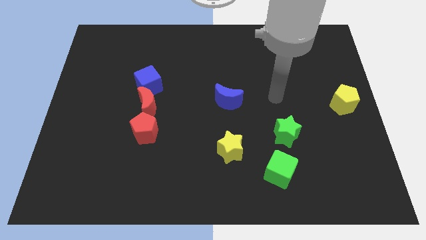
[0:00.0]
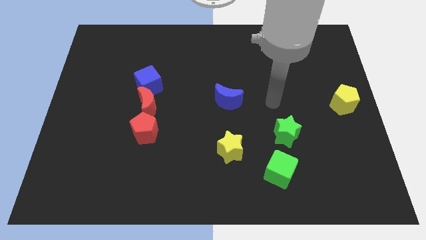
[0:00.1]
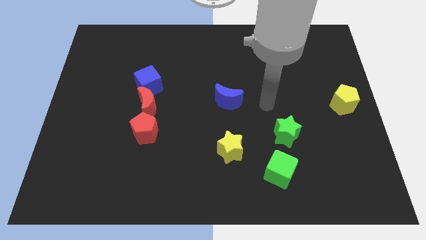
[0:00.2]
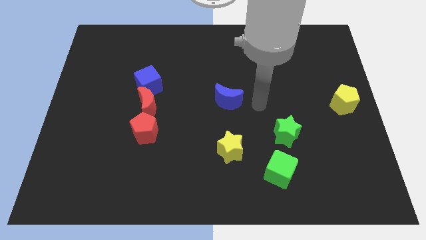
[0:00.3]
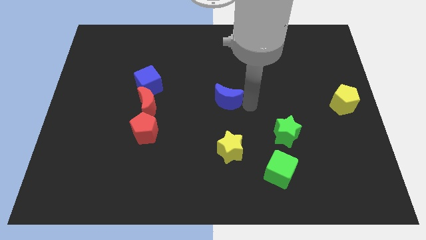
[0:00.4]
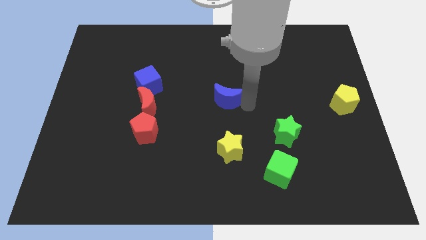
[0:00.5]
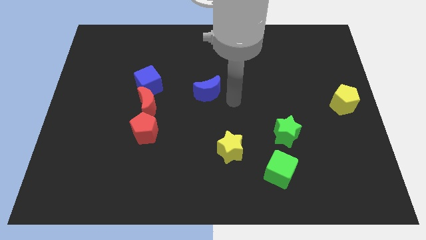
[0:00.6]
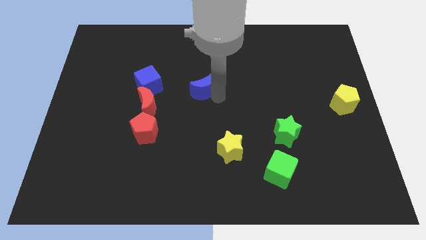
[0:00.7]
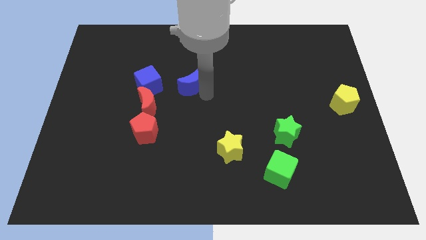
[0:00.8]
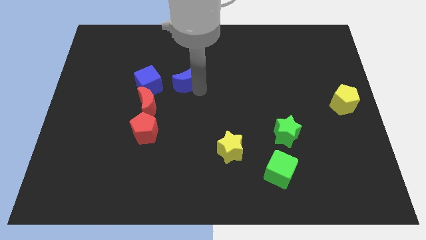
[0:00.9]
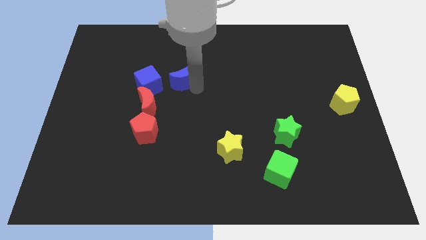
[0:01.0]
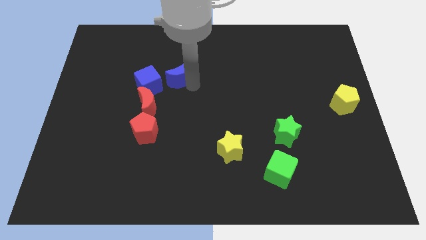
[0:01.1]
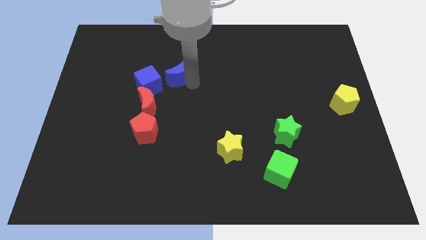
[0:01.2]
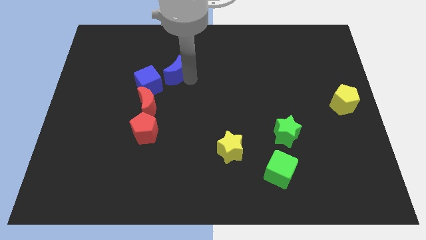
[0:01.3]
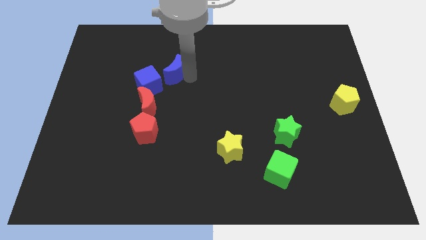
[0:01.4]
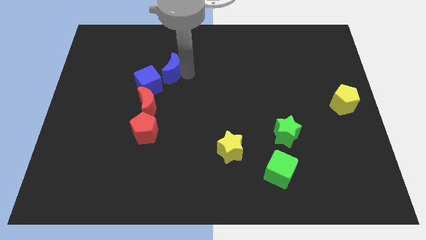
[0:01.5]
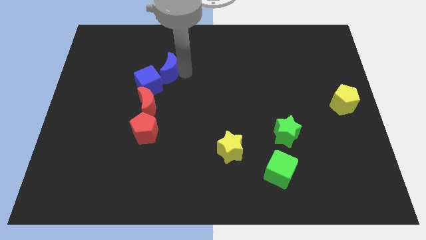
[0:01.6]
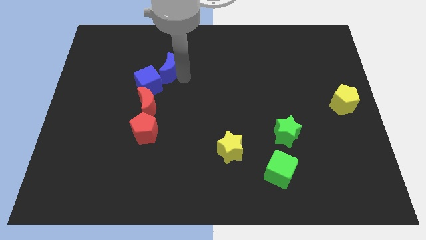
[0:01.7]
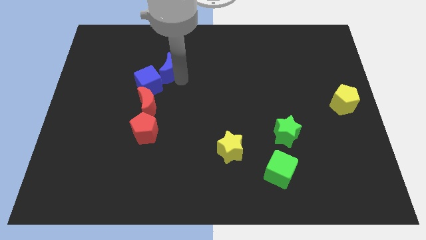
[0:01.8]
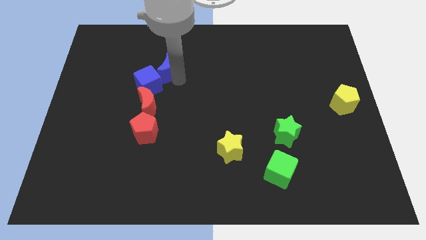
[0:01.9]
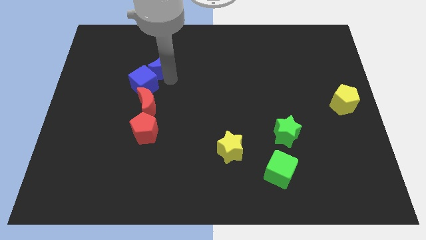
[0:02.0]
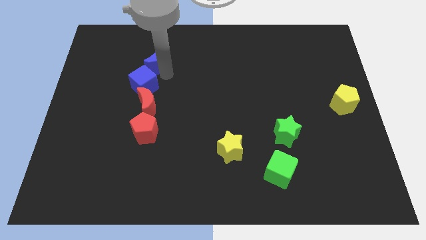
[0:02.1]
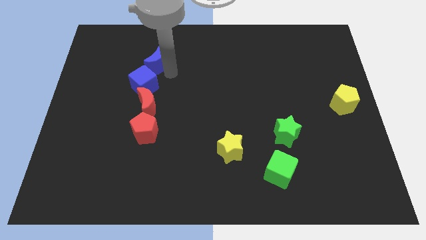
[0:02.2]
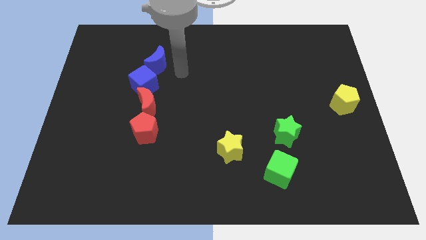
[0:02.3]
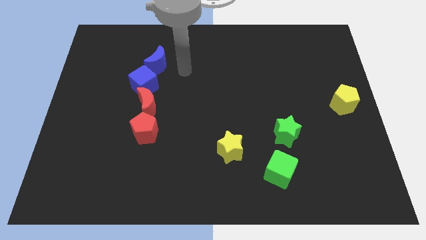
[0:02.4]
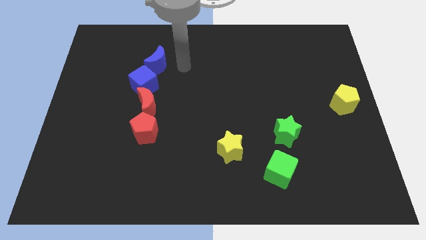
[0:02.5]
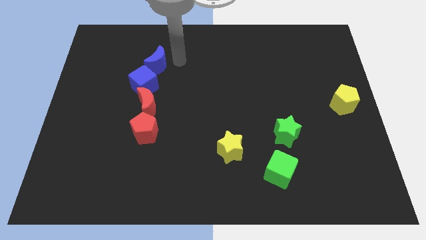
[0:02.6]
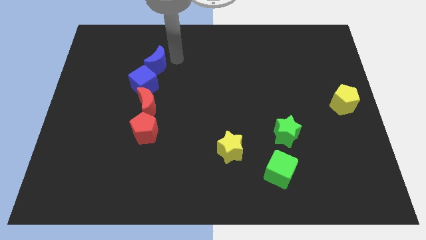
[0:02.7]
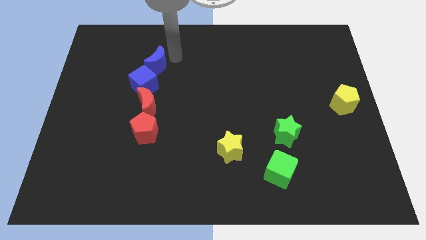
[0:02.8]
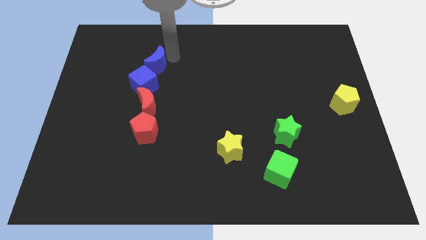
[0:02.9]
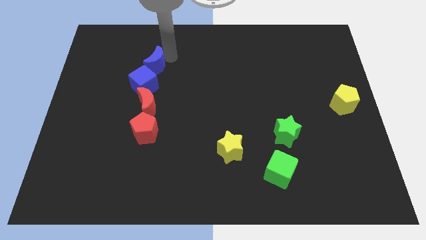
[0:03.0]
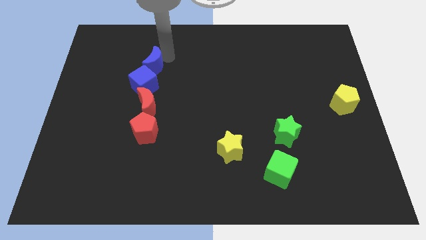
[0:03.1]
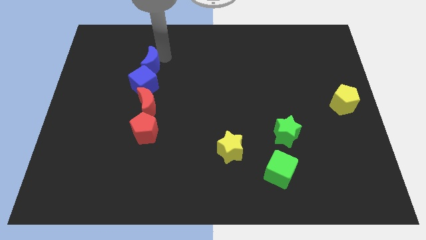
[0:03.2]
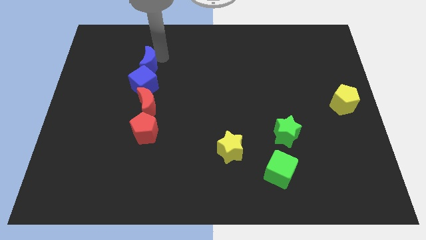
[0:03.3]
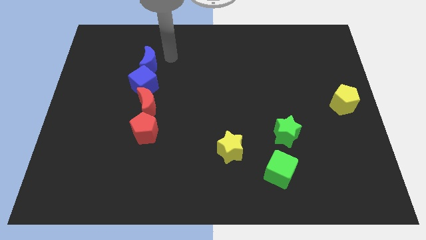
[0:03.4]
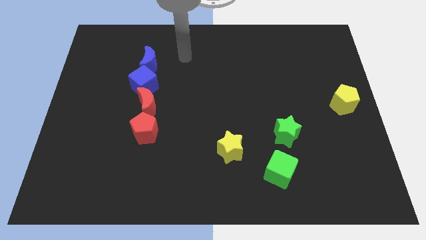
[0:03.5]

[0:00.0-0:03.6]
move the blue crescent to the top of the blue cube

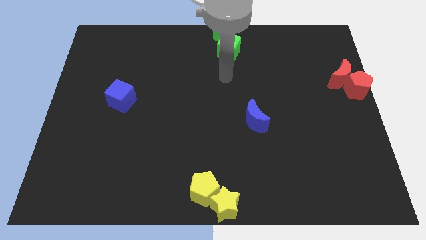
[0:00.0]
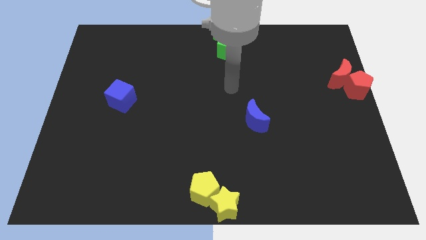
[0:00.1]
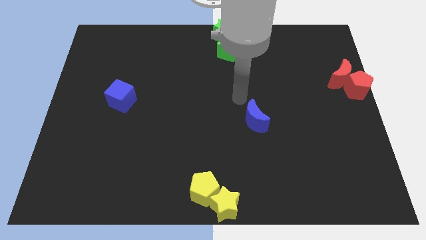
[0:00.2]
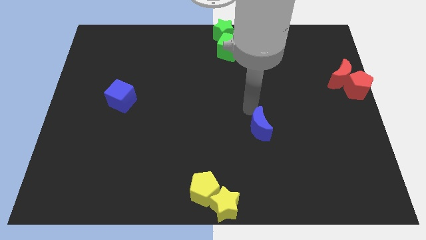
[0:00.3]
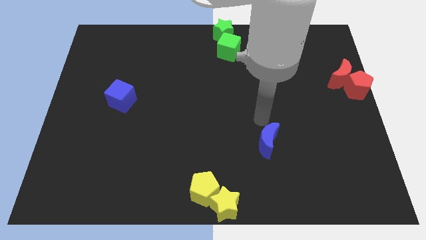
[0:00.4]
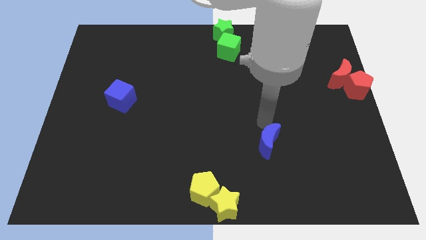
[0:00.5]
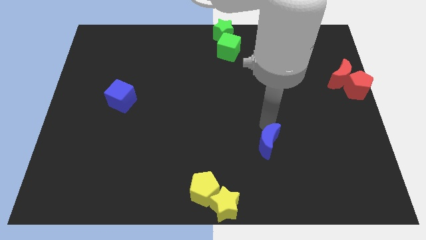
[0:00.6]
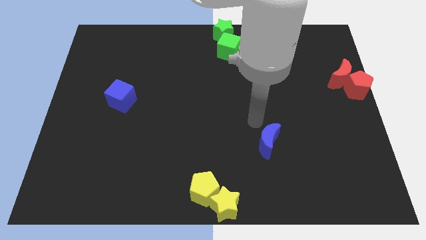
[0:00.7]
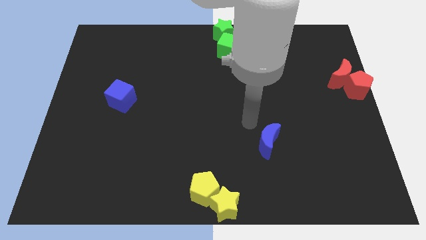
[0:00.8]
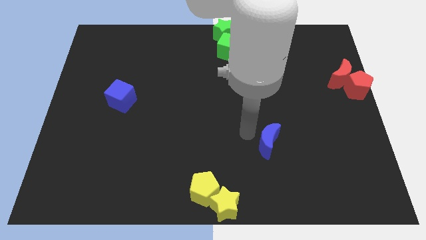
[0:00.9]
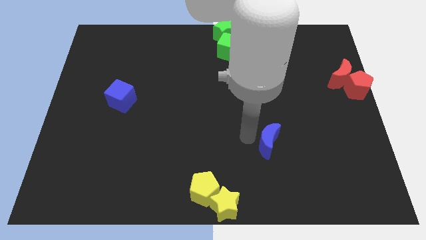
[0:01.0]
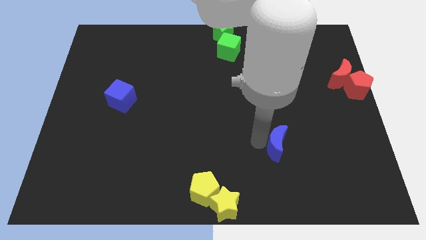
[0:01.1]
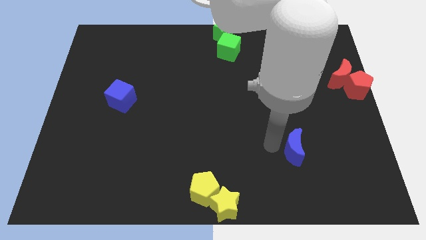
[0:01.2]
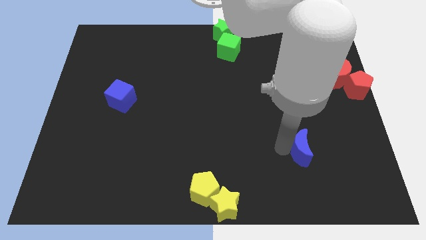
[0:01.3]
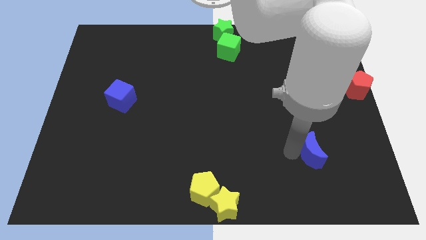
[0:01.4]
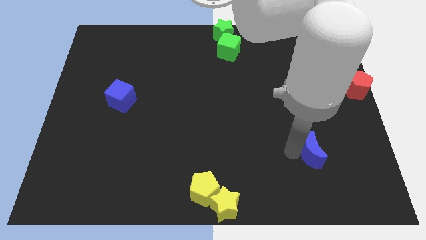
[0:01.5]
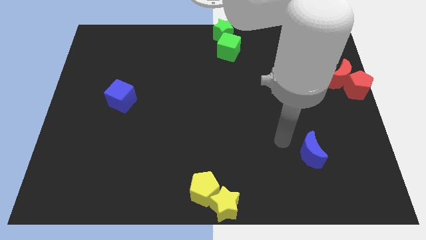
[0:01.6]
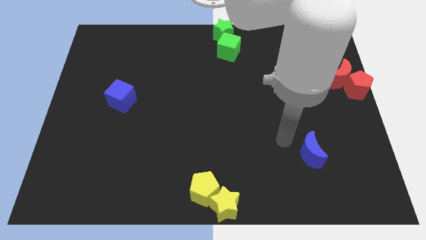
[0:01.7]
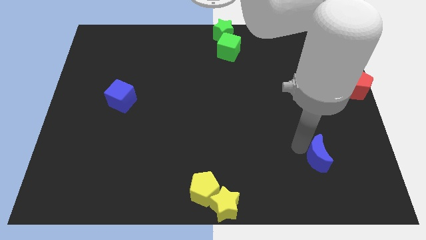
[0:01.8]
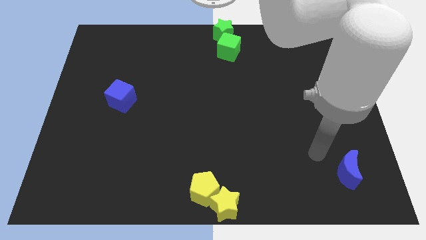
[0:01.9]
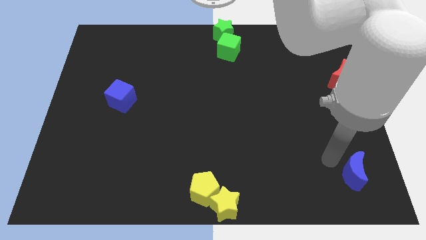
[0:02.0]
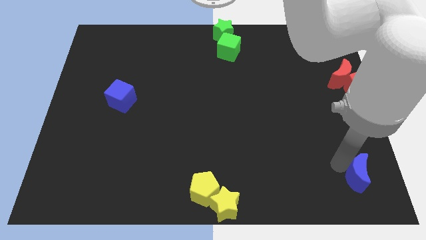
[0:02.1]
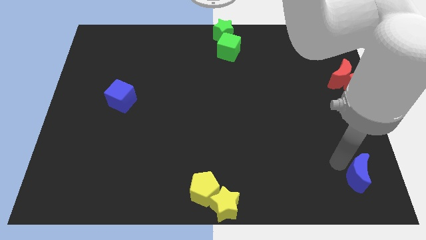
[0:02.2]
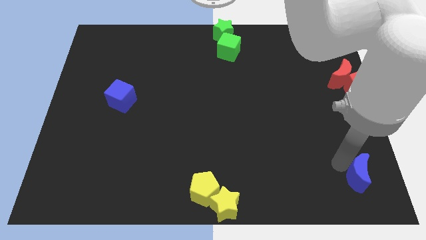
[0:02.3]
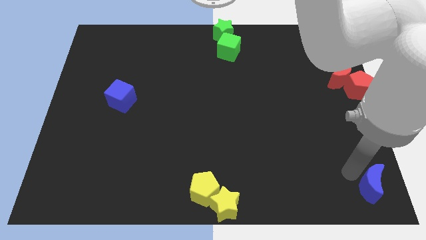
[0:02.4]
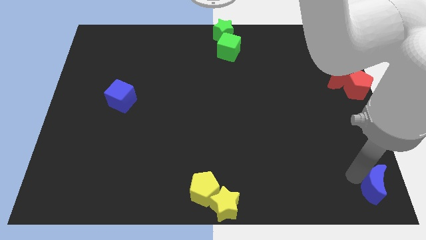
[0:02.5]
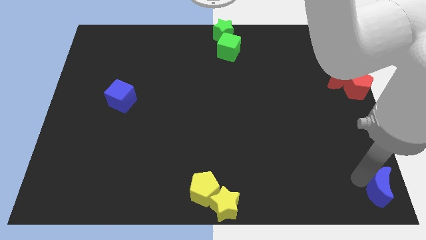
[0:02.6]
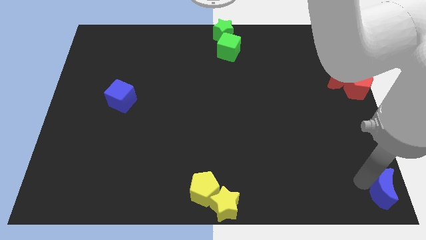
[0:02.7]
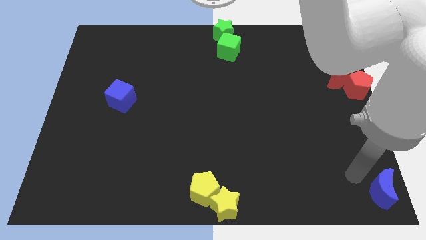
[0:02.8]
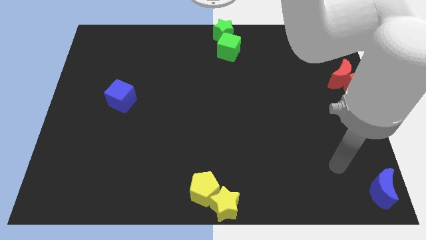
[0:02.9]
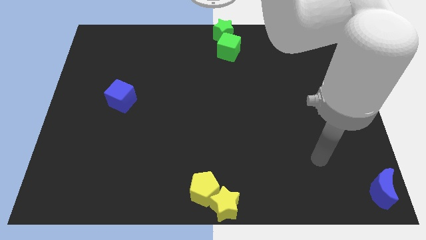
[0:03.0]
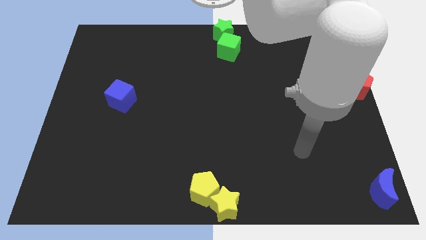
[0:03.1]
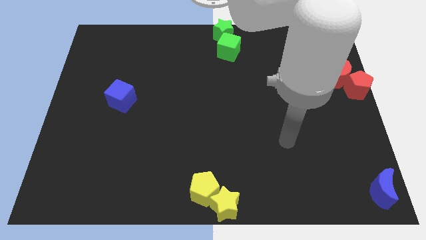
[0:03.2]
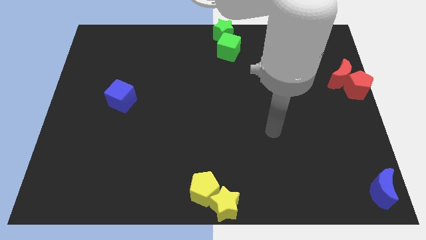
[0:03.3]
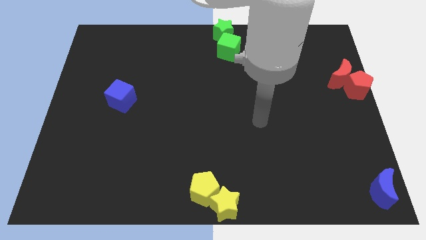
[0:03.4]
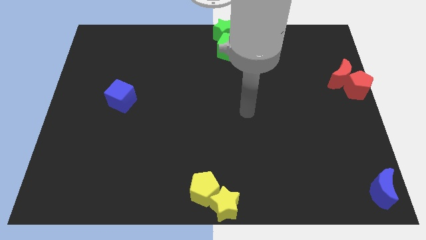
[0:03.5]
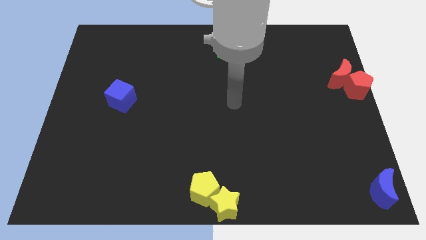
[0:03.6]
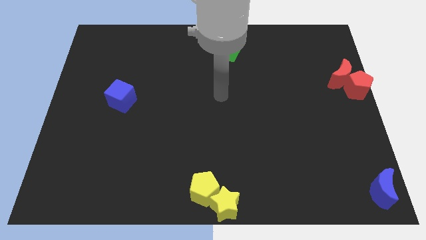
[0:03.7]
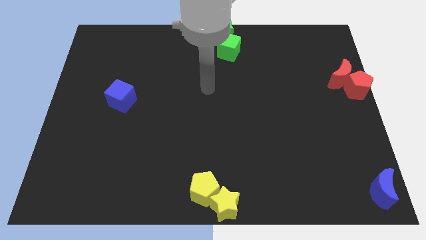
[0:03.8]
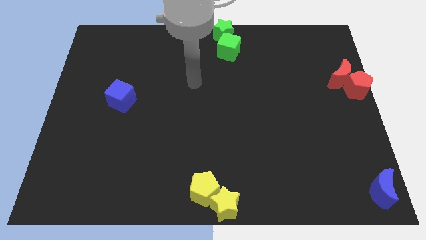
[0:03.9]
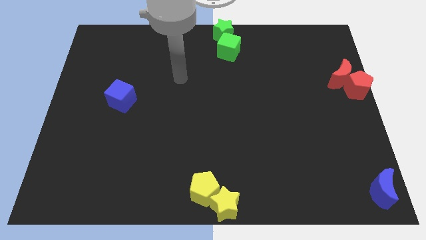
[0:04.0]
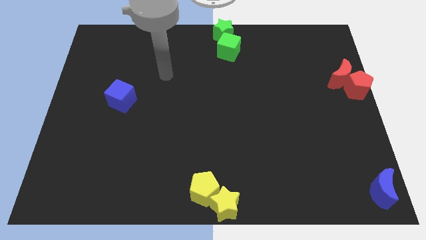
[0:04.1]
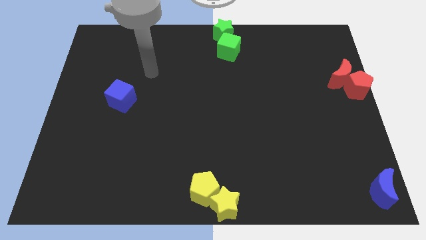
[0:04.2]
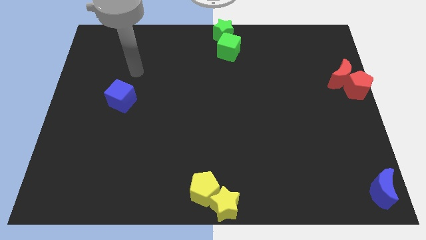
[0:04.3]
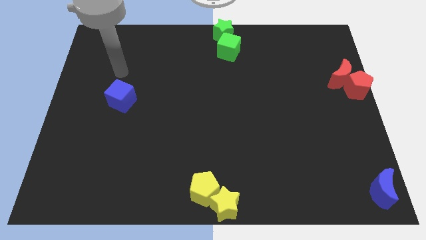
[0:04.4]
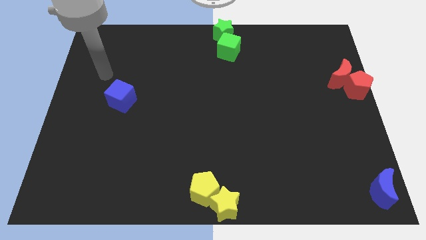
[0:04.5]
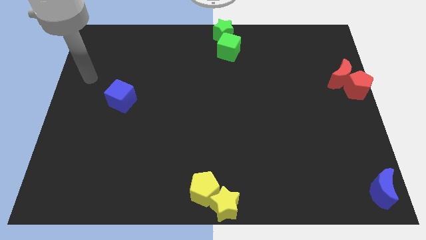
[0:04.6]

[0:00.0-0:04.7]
push the blue moon to the bottom right

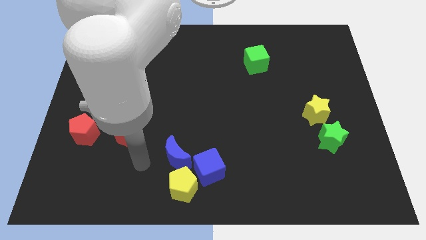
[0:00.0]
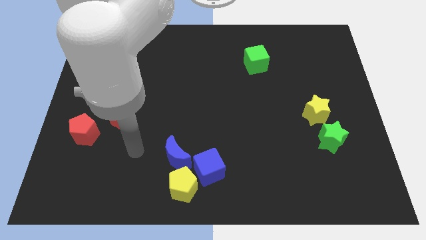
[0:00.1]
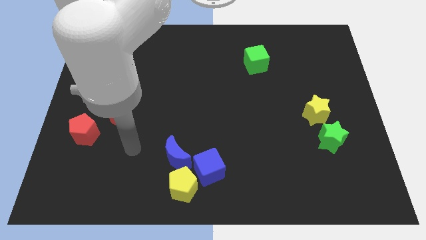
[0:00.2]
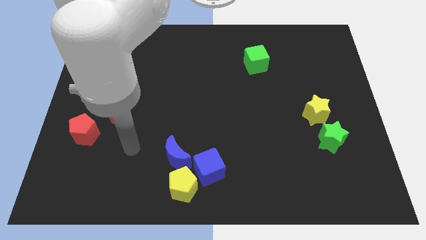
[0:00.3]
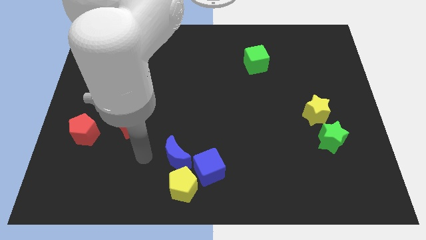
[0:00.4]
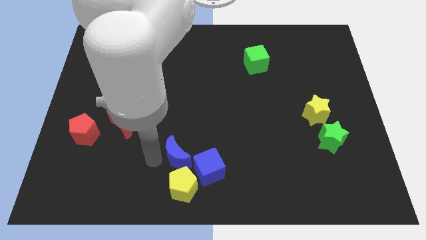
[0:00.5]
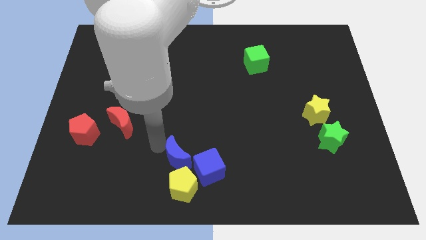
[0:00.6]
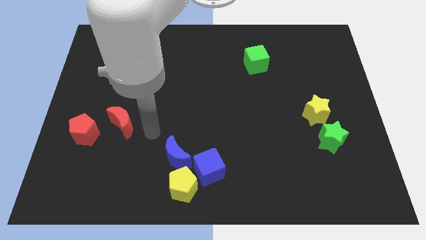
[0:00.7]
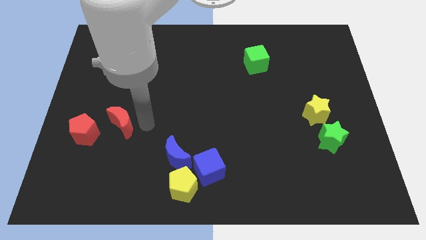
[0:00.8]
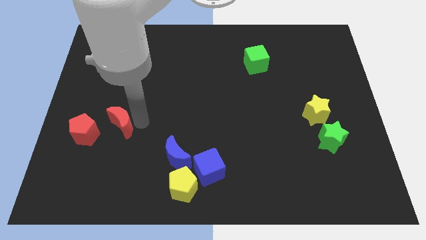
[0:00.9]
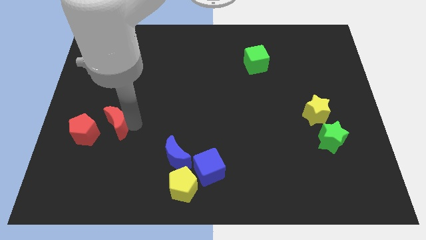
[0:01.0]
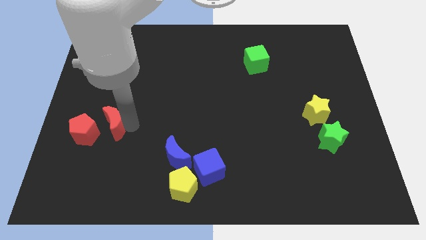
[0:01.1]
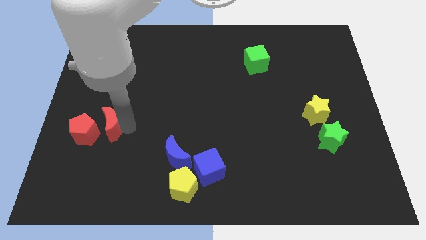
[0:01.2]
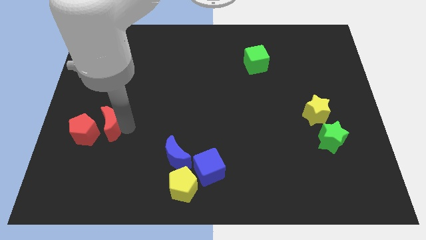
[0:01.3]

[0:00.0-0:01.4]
push the red crescent close to the red pentagon
